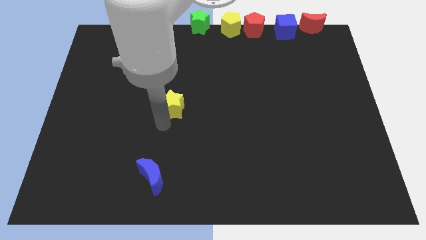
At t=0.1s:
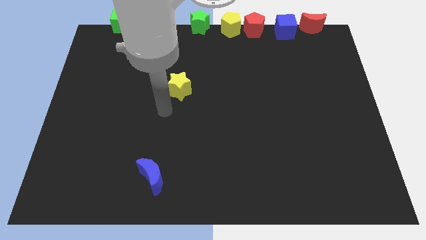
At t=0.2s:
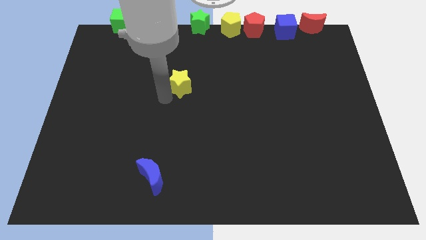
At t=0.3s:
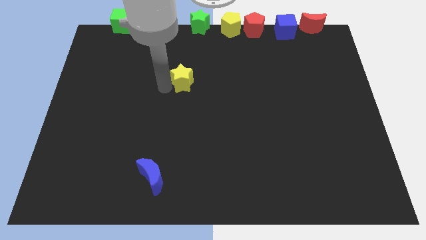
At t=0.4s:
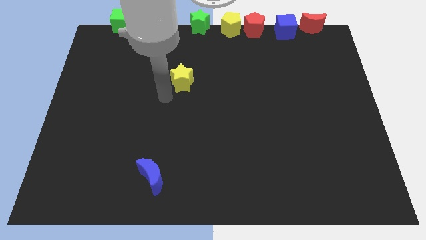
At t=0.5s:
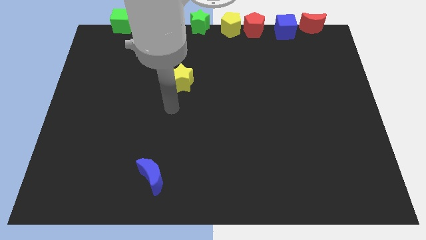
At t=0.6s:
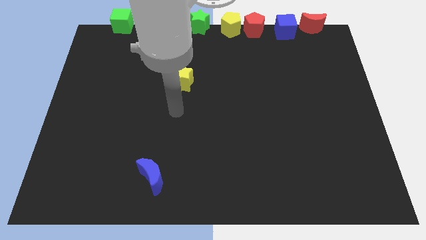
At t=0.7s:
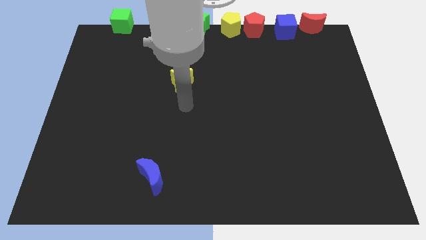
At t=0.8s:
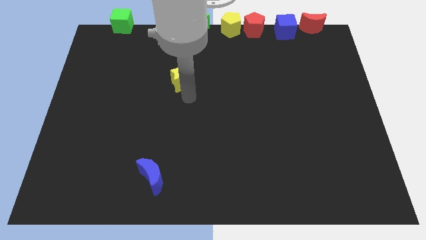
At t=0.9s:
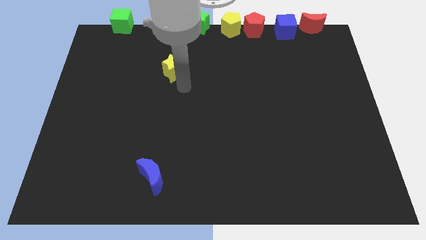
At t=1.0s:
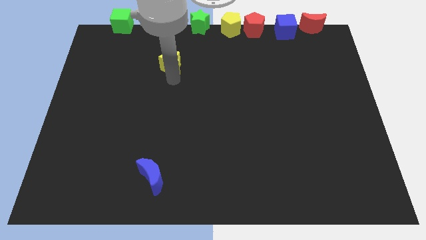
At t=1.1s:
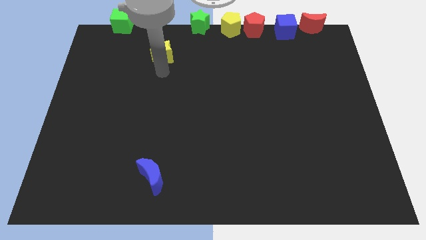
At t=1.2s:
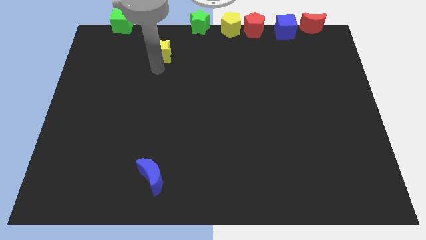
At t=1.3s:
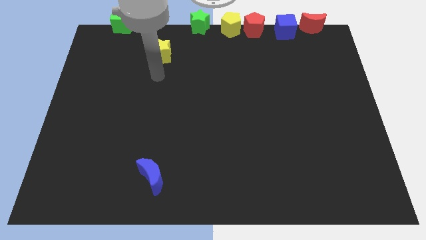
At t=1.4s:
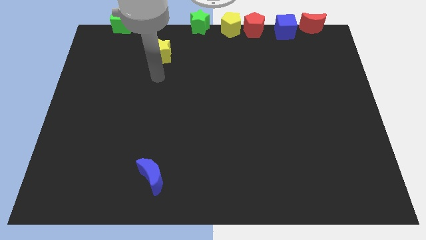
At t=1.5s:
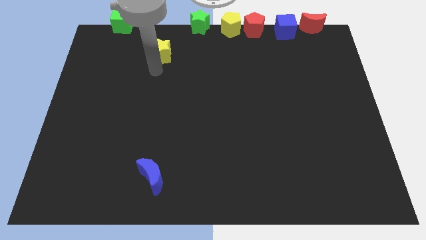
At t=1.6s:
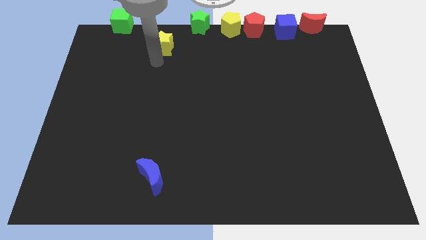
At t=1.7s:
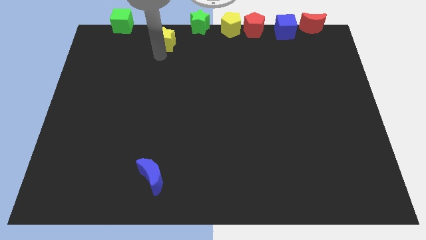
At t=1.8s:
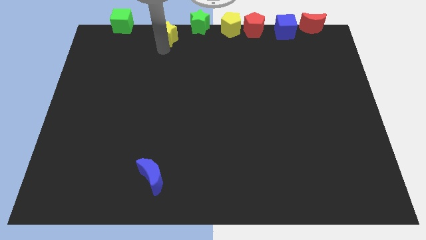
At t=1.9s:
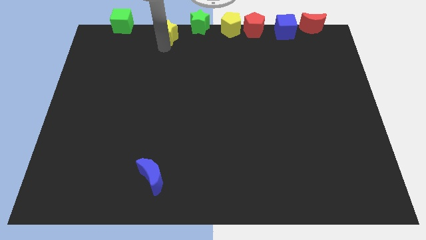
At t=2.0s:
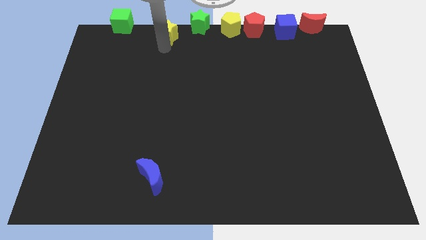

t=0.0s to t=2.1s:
place yellow star adjacent to the green star

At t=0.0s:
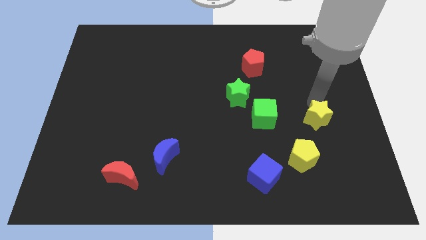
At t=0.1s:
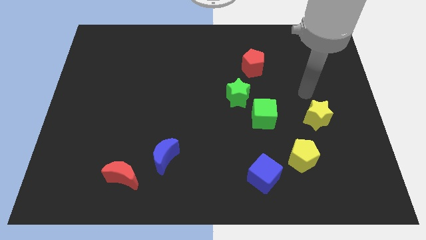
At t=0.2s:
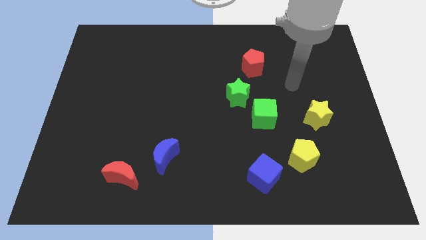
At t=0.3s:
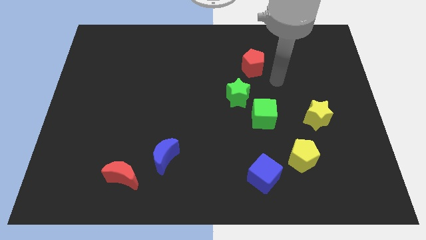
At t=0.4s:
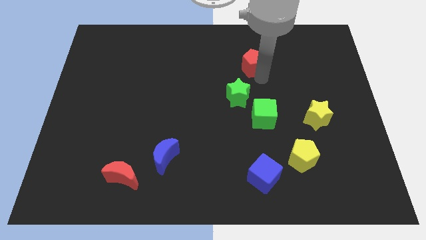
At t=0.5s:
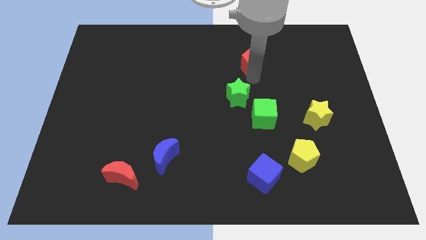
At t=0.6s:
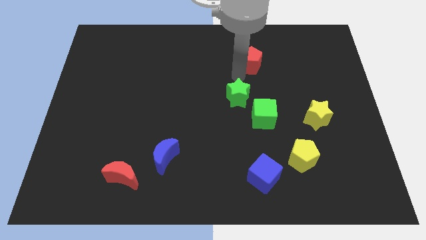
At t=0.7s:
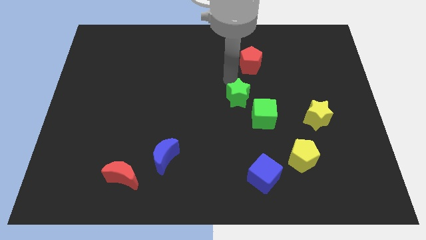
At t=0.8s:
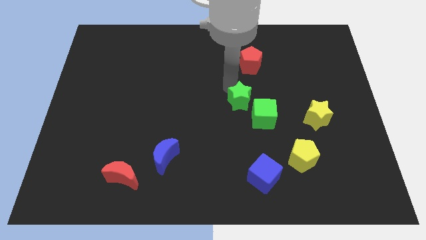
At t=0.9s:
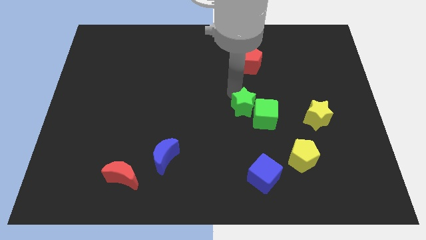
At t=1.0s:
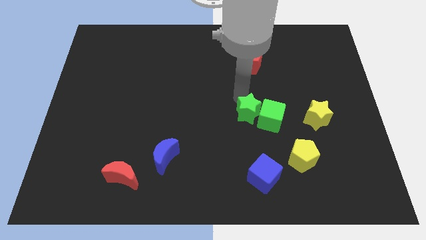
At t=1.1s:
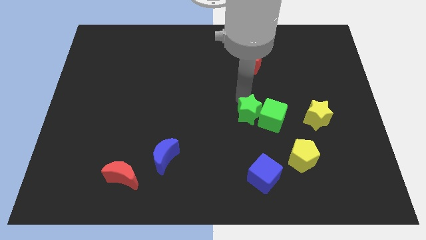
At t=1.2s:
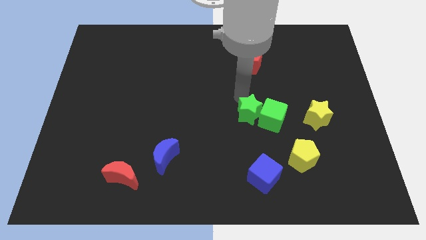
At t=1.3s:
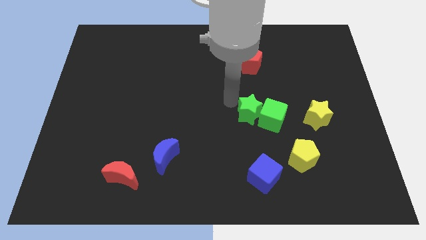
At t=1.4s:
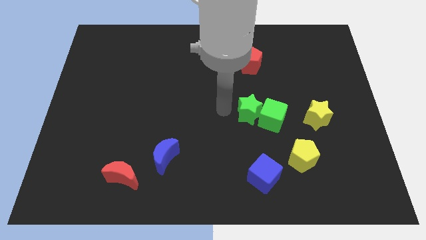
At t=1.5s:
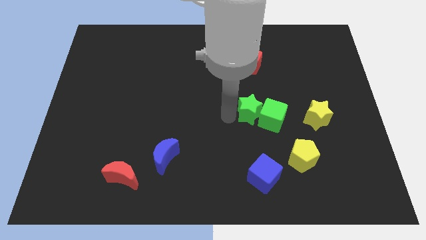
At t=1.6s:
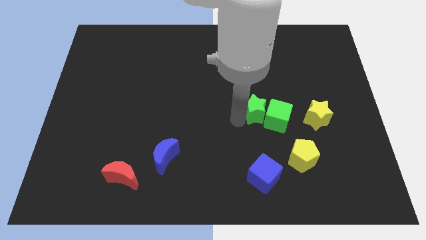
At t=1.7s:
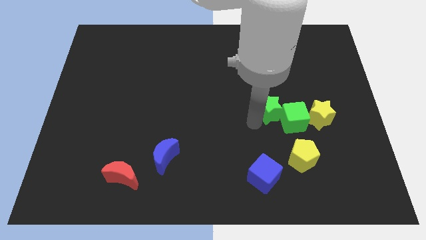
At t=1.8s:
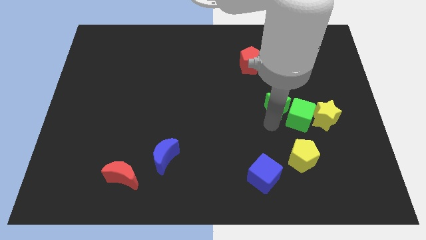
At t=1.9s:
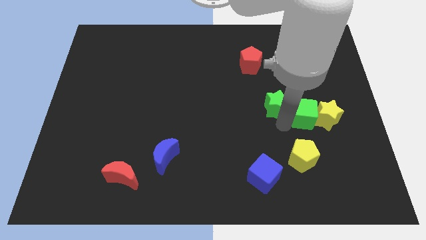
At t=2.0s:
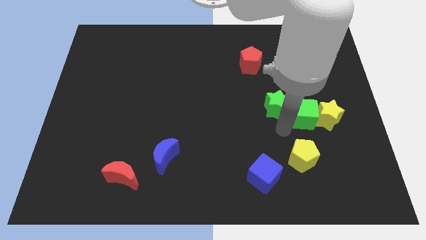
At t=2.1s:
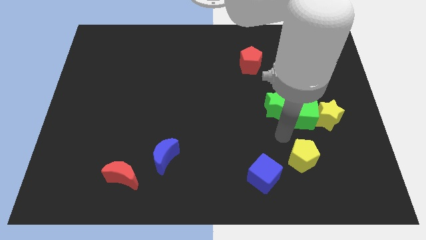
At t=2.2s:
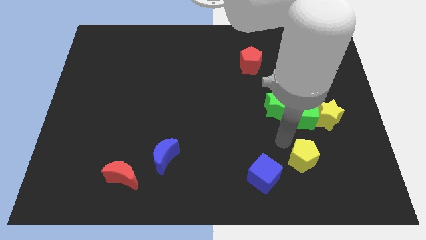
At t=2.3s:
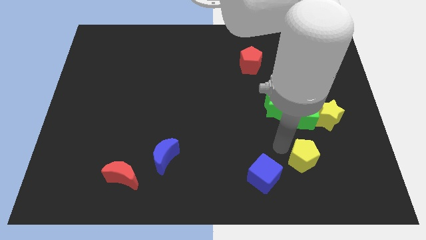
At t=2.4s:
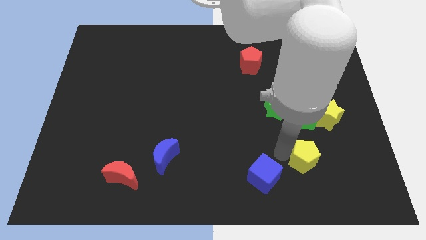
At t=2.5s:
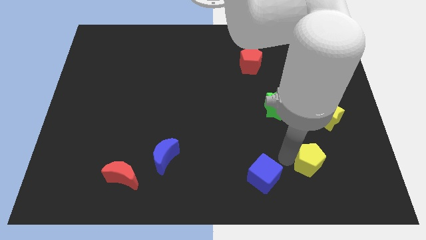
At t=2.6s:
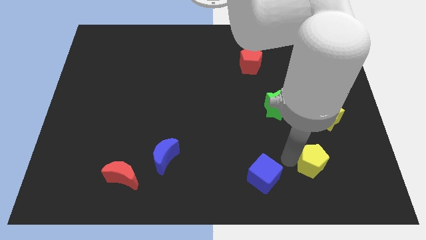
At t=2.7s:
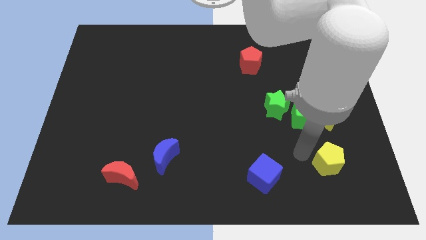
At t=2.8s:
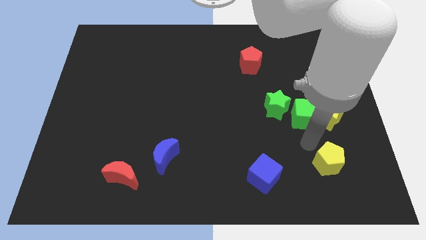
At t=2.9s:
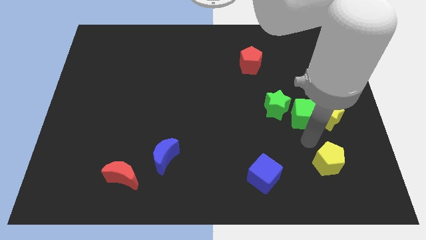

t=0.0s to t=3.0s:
move your arm away from the yellow star

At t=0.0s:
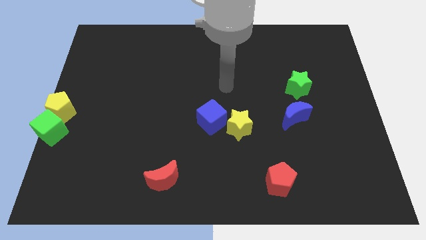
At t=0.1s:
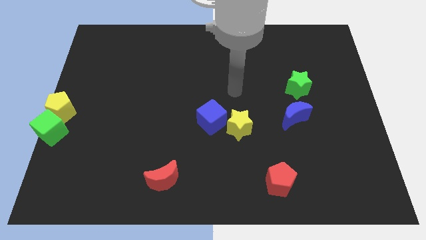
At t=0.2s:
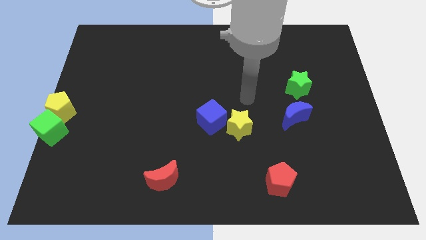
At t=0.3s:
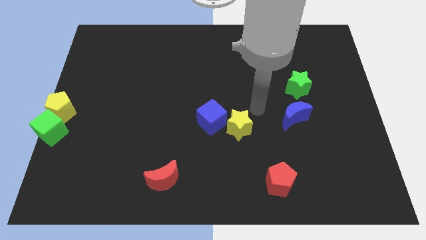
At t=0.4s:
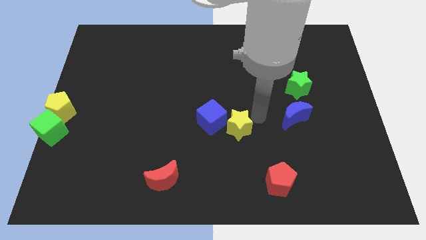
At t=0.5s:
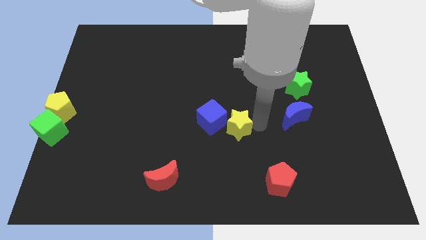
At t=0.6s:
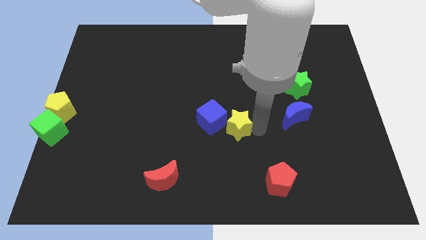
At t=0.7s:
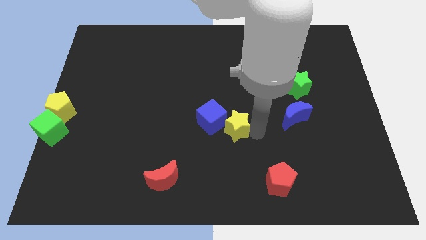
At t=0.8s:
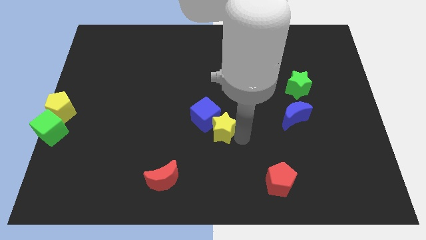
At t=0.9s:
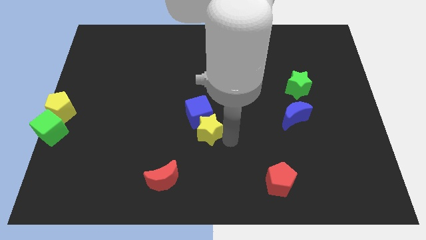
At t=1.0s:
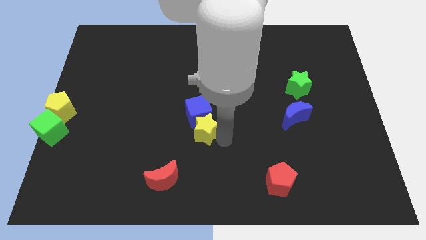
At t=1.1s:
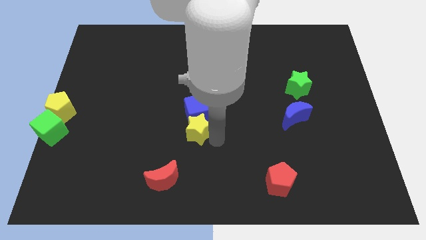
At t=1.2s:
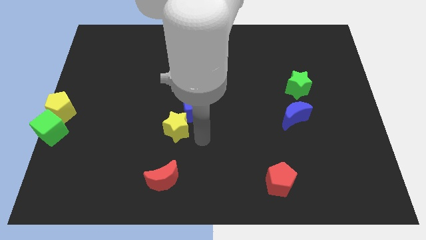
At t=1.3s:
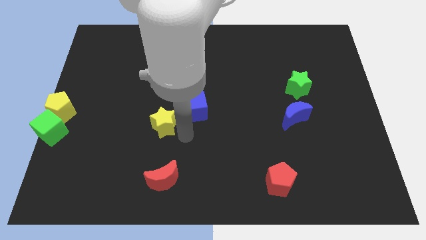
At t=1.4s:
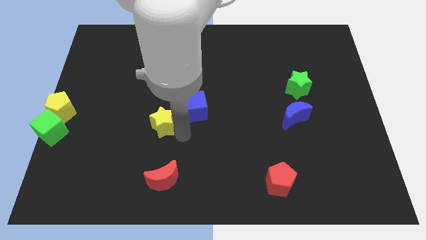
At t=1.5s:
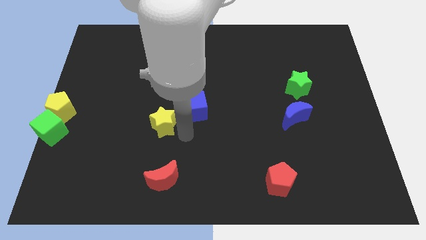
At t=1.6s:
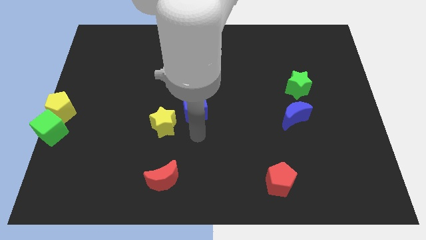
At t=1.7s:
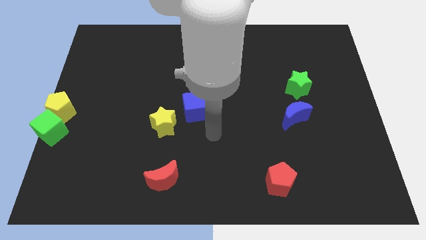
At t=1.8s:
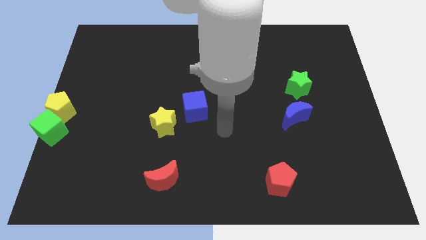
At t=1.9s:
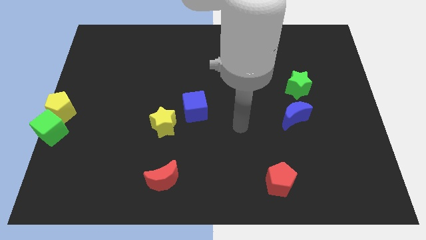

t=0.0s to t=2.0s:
separate the yellow star from blue cube

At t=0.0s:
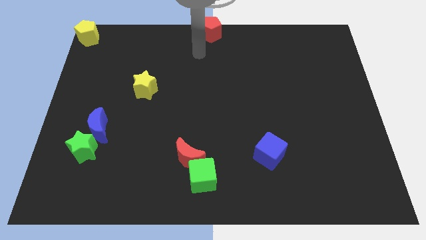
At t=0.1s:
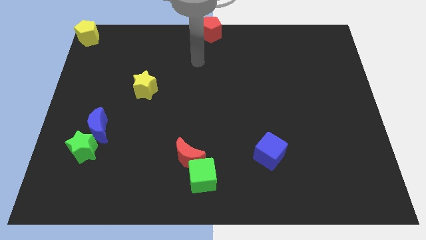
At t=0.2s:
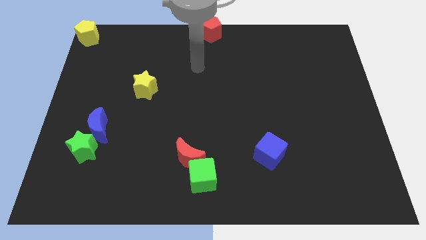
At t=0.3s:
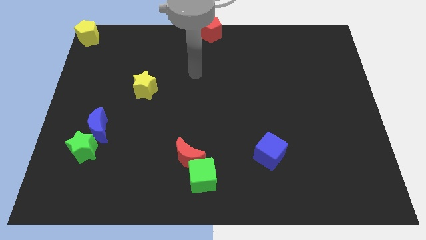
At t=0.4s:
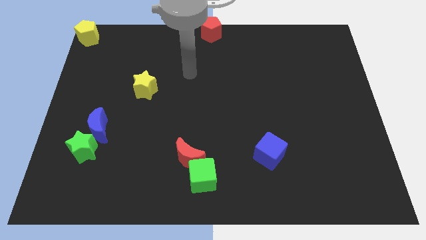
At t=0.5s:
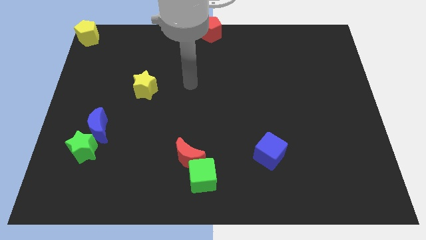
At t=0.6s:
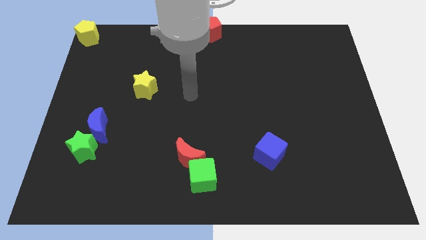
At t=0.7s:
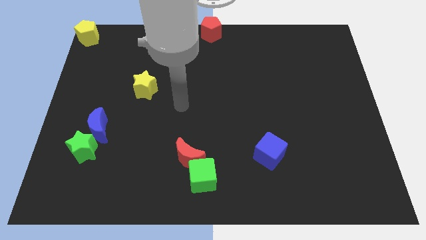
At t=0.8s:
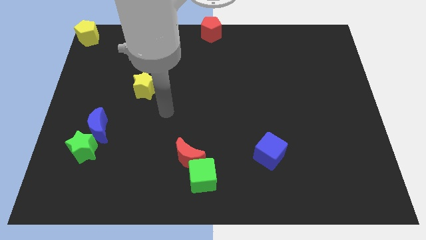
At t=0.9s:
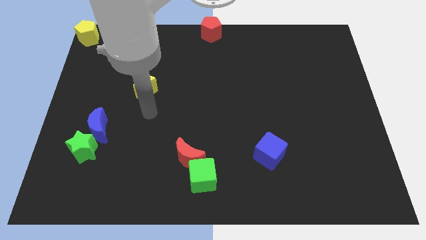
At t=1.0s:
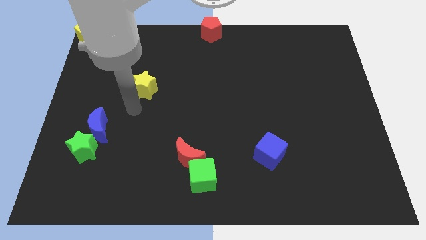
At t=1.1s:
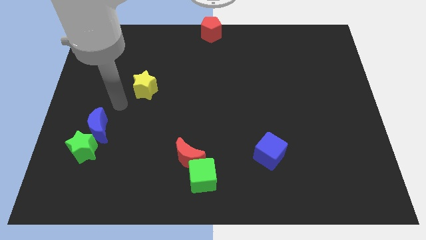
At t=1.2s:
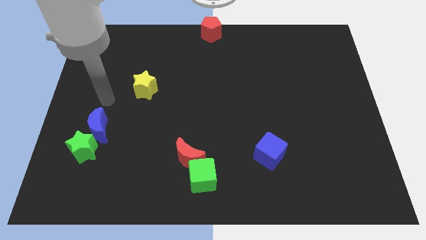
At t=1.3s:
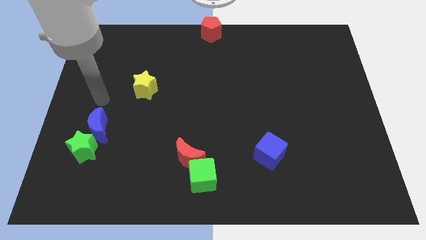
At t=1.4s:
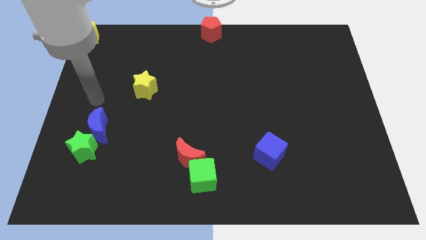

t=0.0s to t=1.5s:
point your arm at the top of the blue crescent

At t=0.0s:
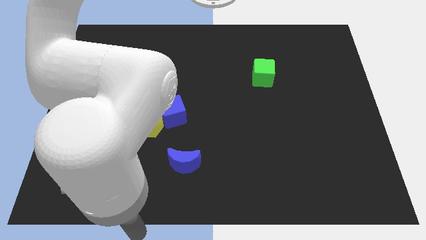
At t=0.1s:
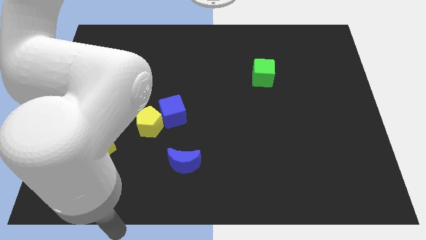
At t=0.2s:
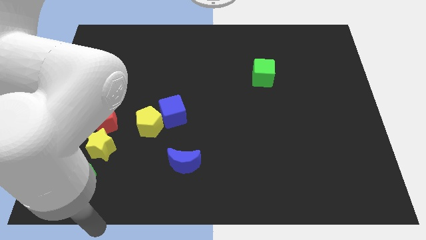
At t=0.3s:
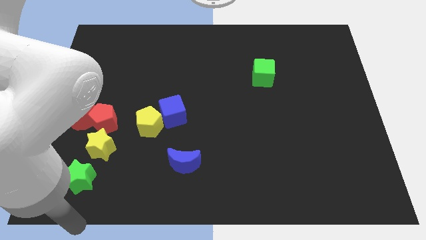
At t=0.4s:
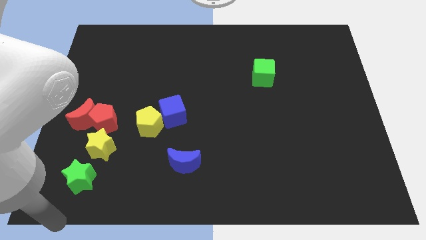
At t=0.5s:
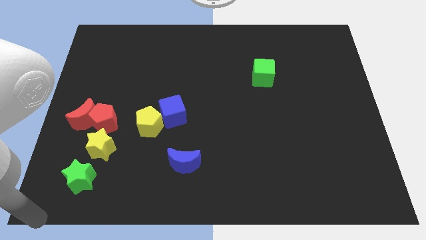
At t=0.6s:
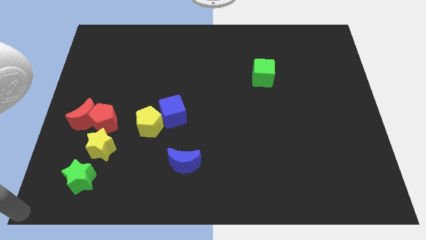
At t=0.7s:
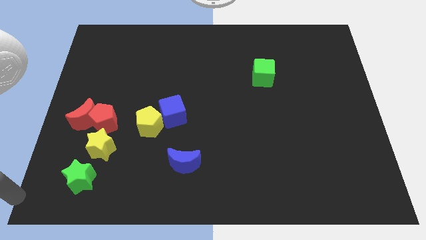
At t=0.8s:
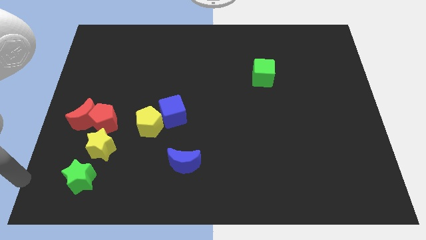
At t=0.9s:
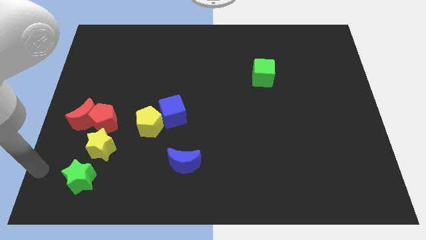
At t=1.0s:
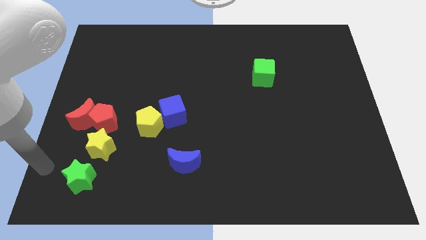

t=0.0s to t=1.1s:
point the arm to the left of the green star
